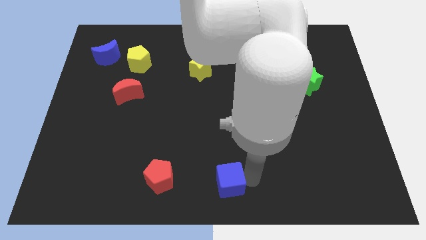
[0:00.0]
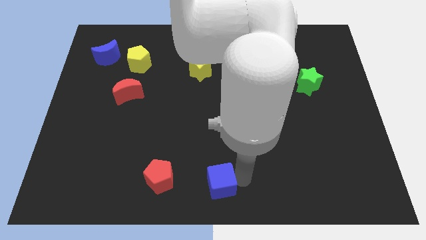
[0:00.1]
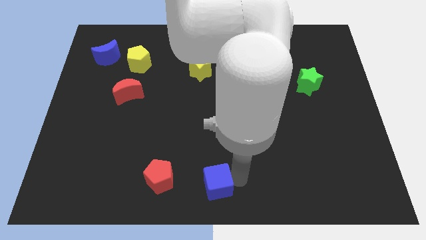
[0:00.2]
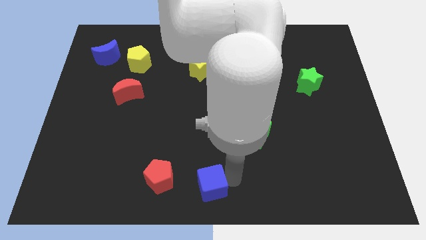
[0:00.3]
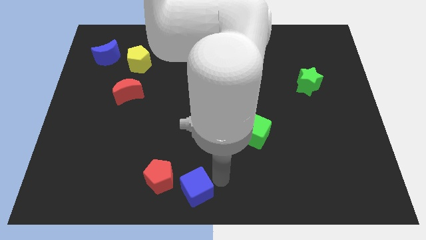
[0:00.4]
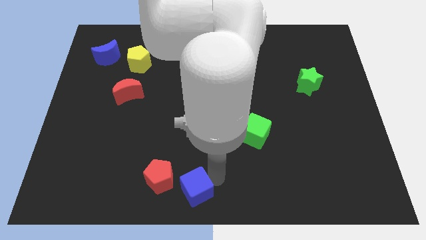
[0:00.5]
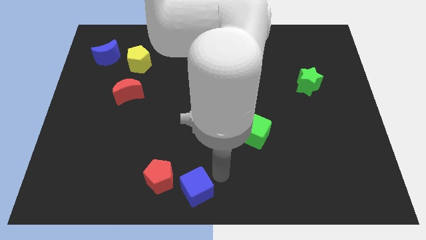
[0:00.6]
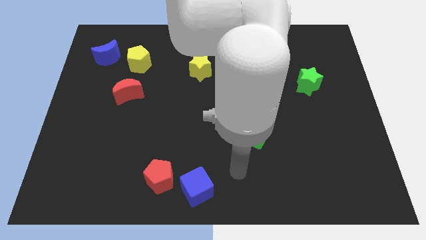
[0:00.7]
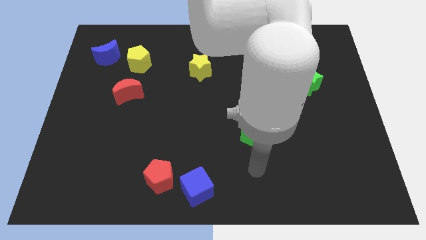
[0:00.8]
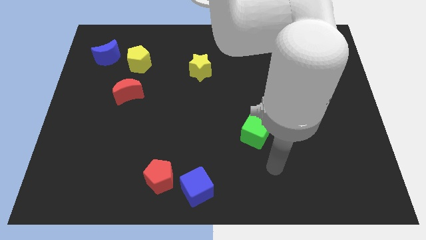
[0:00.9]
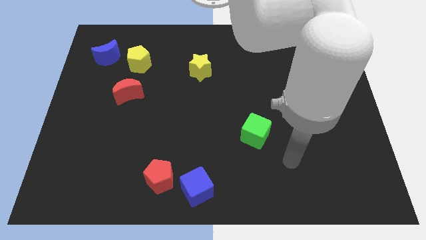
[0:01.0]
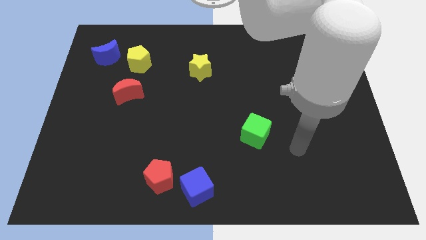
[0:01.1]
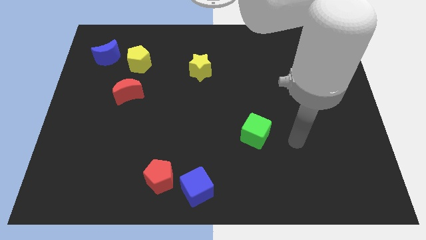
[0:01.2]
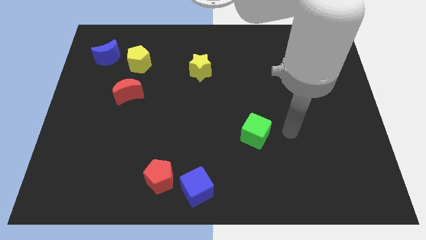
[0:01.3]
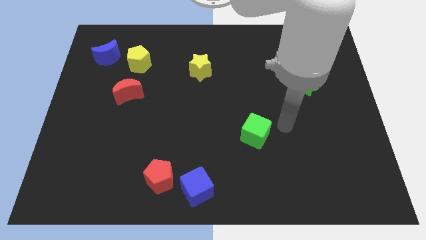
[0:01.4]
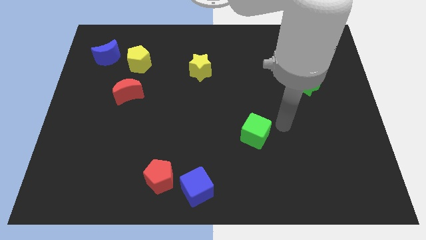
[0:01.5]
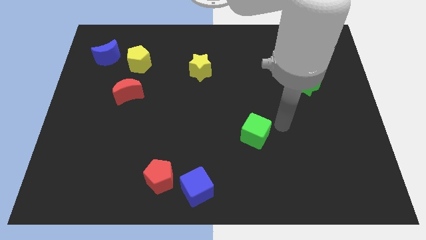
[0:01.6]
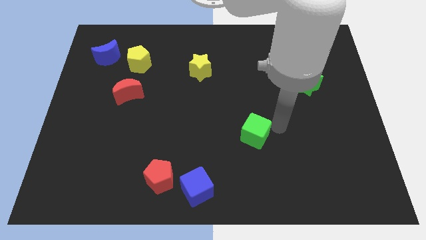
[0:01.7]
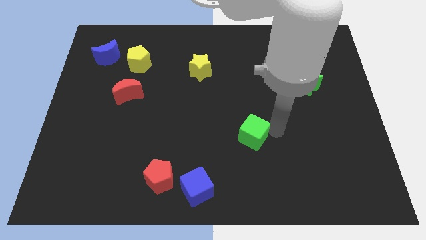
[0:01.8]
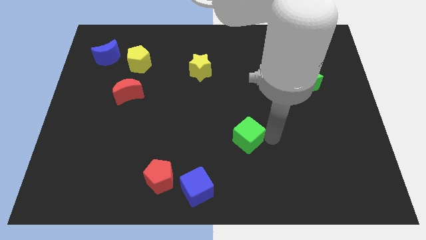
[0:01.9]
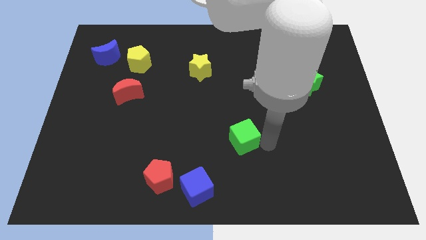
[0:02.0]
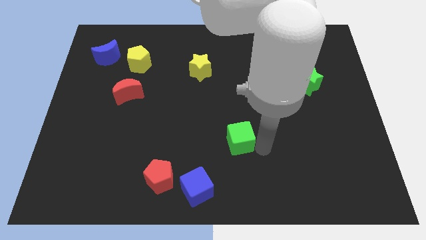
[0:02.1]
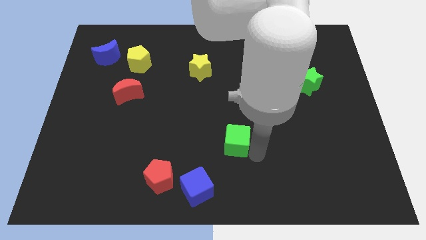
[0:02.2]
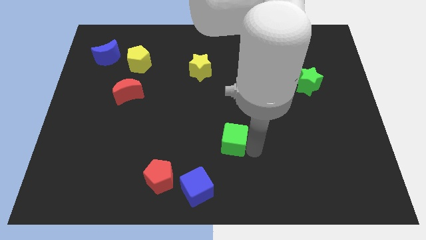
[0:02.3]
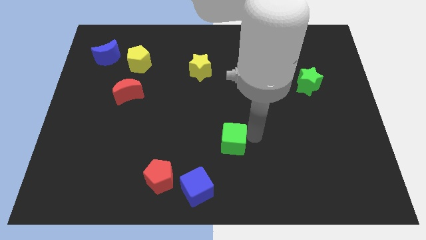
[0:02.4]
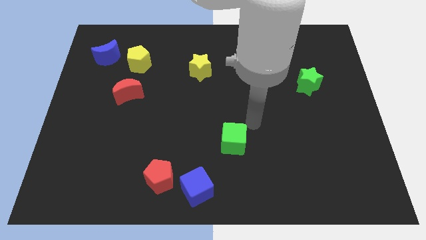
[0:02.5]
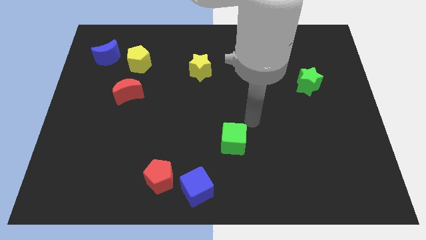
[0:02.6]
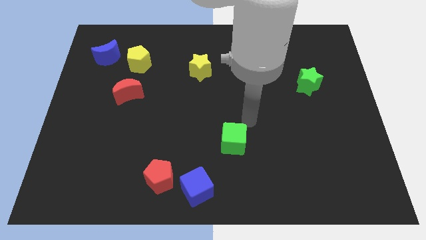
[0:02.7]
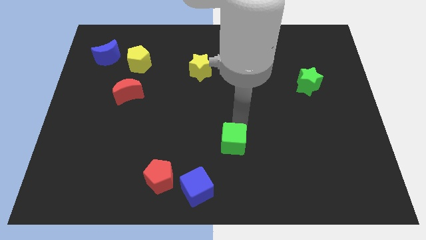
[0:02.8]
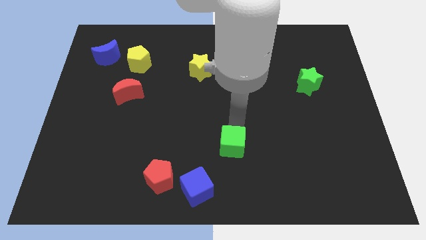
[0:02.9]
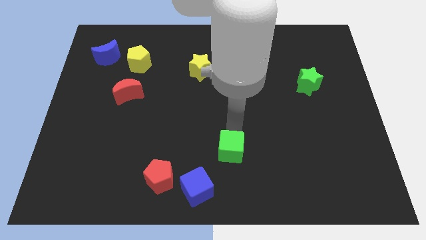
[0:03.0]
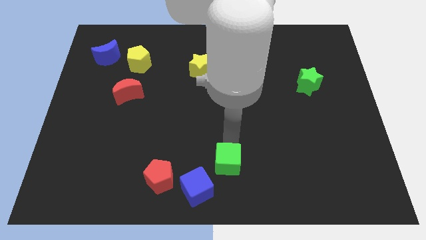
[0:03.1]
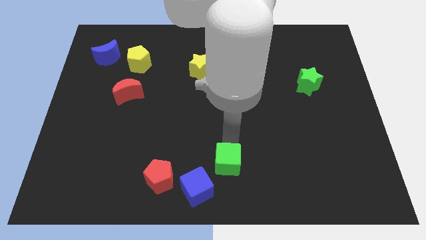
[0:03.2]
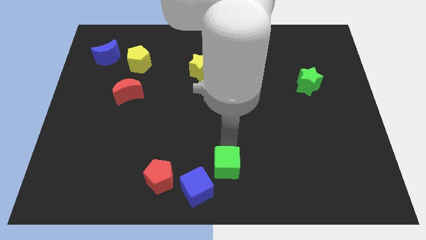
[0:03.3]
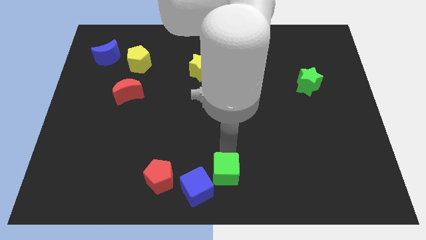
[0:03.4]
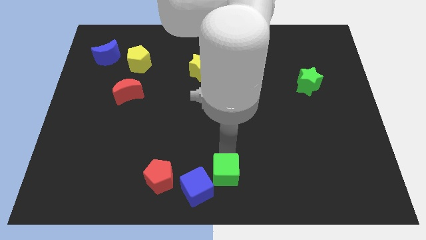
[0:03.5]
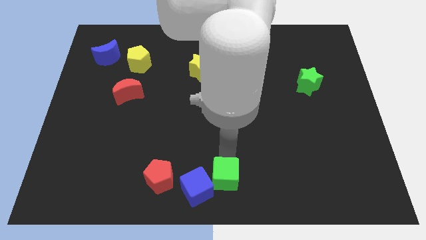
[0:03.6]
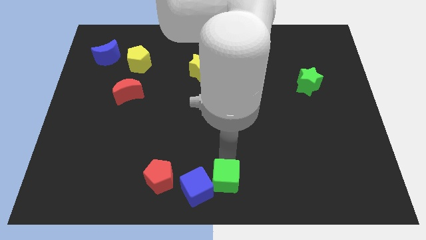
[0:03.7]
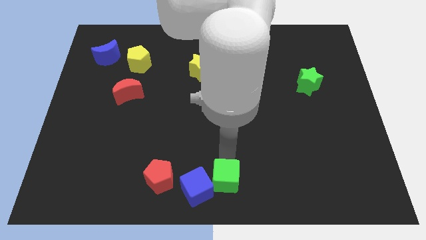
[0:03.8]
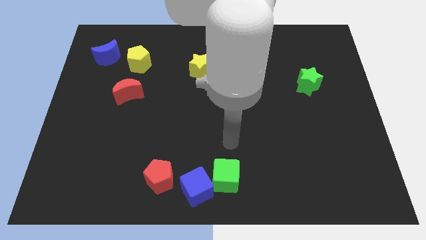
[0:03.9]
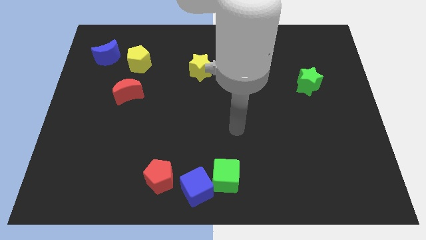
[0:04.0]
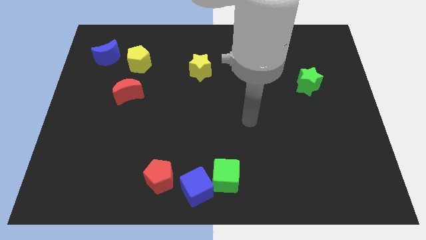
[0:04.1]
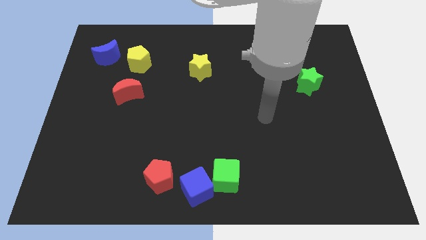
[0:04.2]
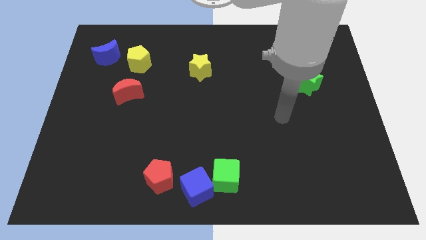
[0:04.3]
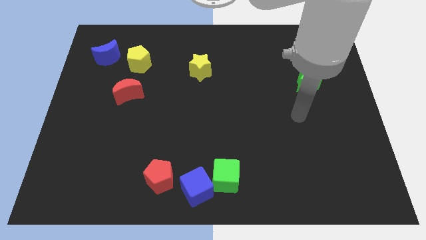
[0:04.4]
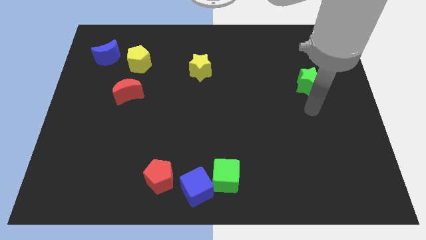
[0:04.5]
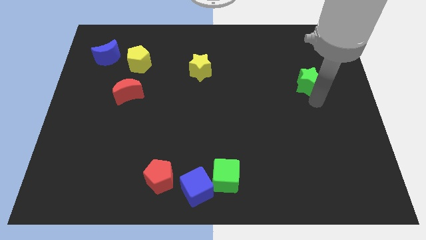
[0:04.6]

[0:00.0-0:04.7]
move the blue cube and the green cube towards the bottom center of the board

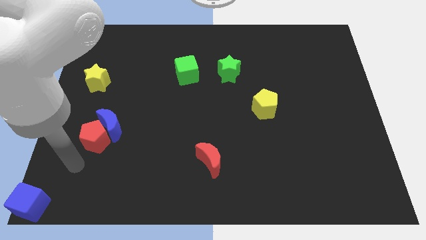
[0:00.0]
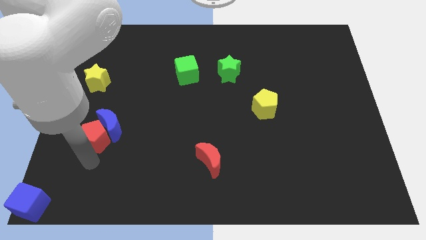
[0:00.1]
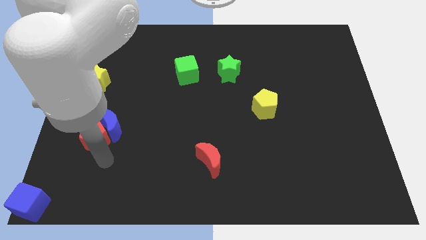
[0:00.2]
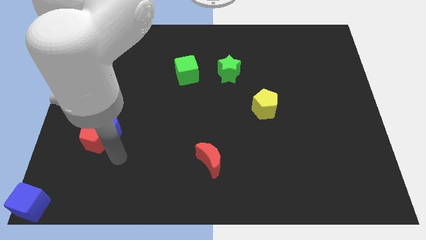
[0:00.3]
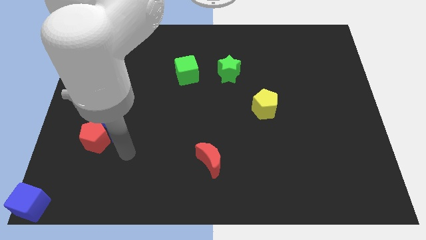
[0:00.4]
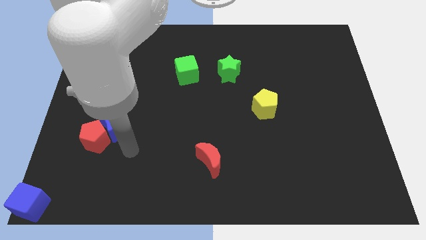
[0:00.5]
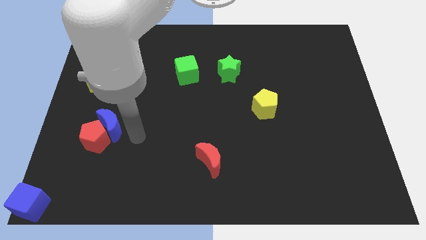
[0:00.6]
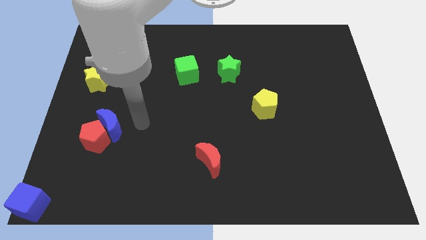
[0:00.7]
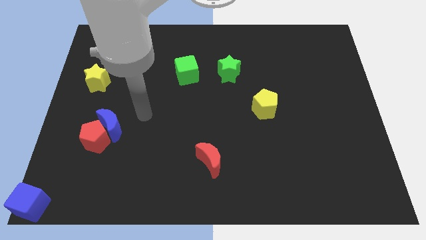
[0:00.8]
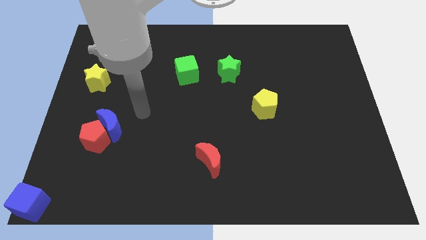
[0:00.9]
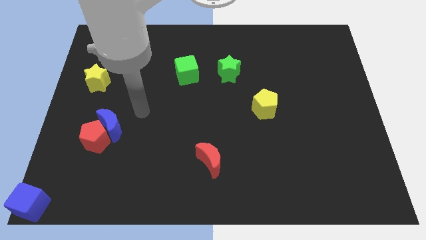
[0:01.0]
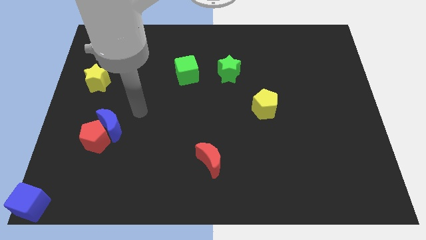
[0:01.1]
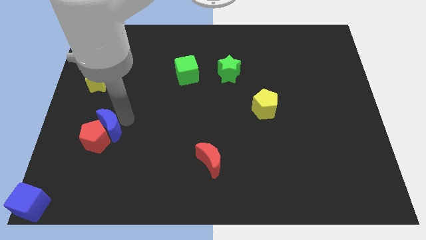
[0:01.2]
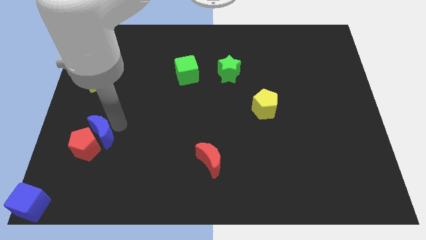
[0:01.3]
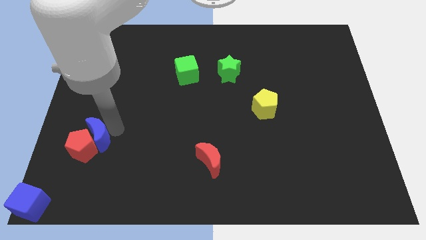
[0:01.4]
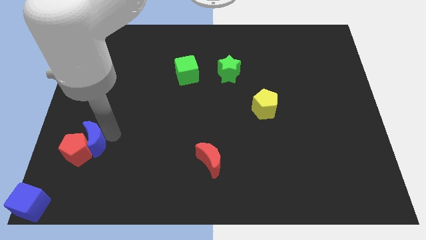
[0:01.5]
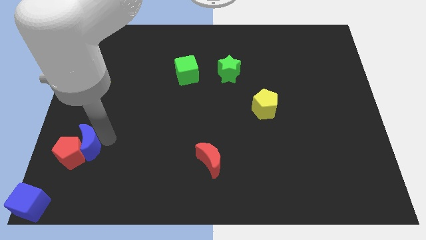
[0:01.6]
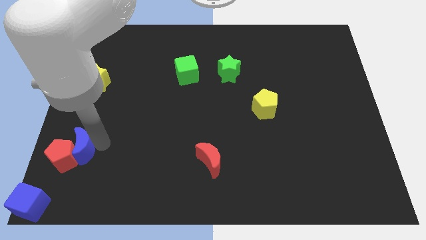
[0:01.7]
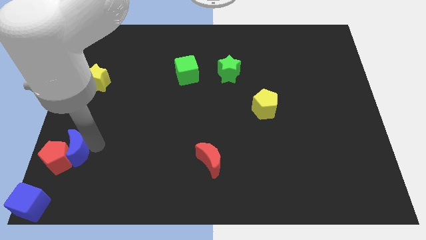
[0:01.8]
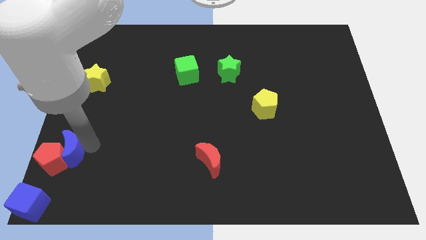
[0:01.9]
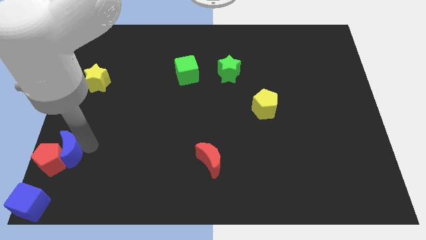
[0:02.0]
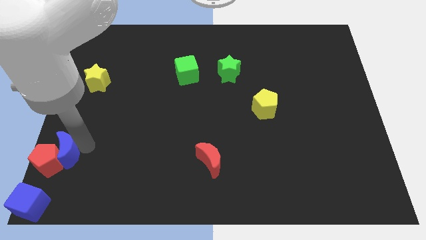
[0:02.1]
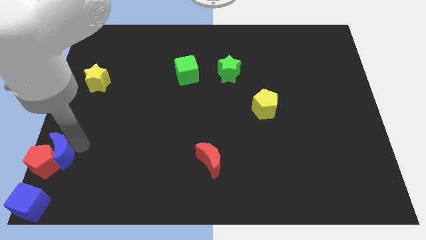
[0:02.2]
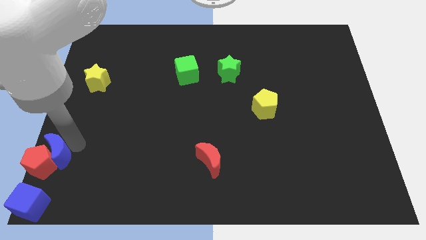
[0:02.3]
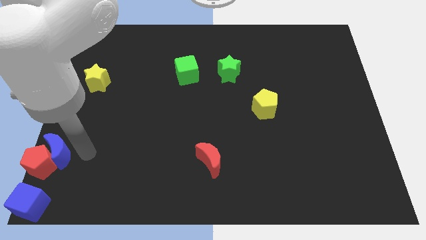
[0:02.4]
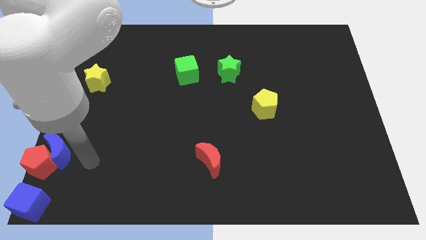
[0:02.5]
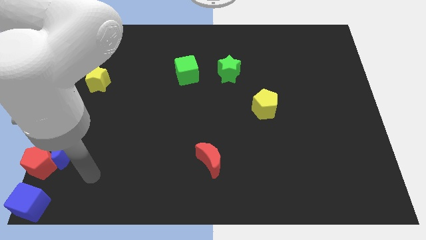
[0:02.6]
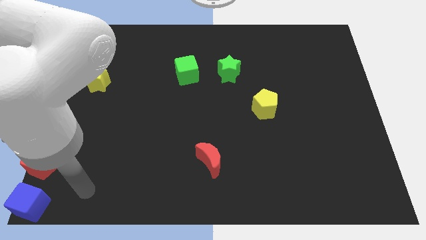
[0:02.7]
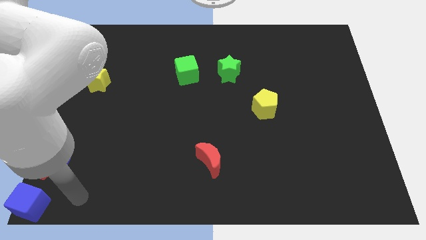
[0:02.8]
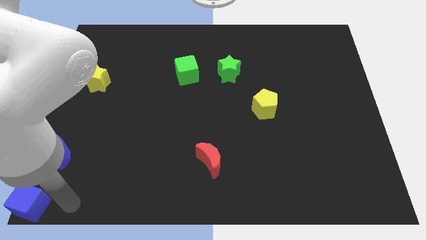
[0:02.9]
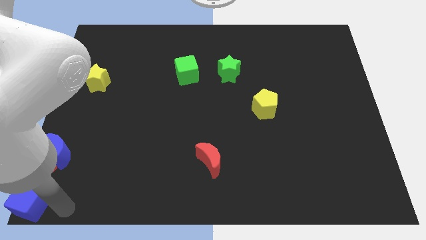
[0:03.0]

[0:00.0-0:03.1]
push the blue crescent and red pentagon towards the left

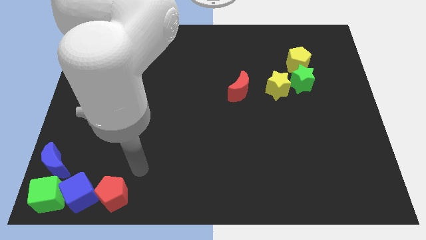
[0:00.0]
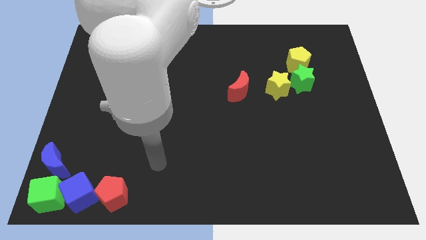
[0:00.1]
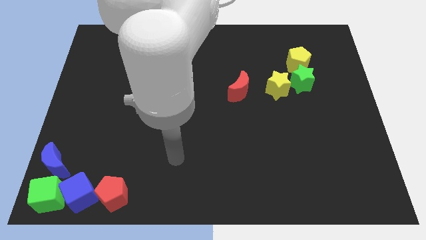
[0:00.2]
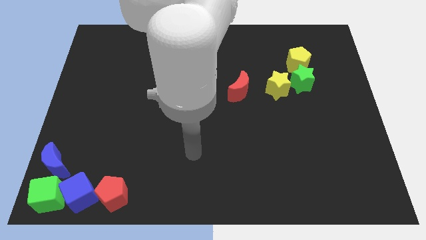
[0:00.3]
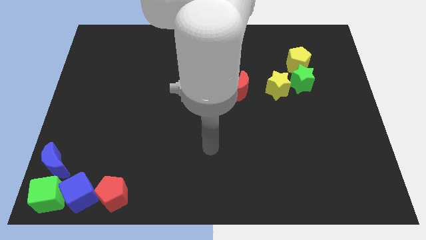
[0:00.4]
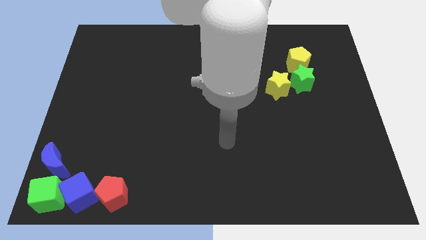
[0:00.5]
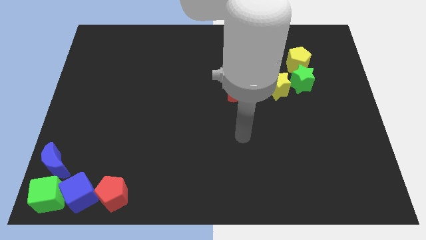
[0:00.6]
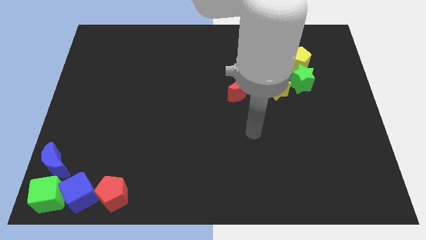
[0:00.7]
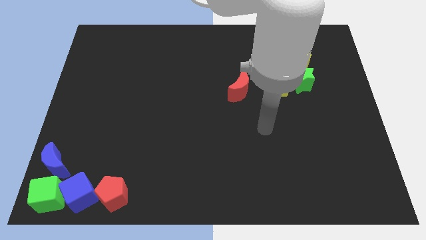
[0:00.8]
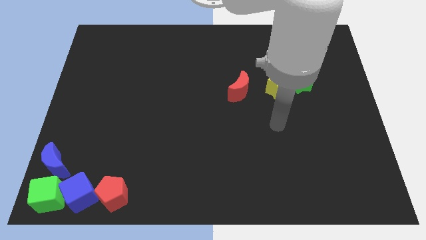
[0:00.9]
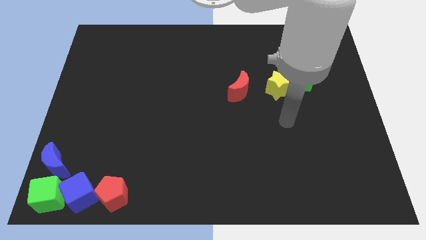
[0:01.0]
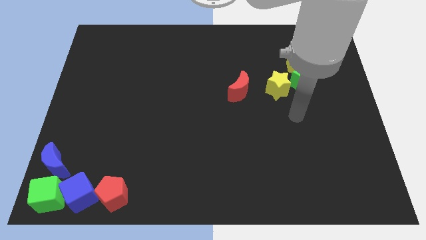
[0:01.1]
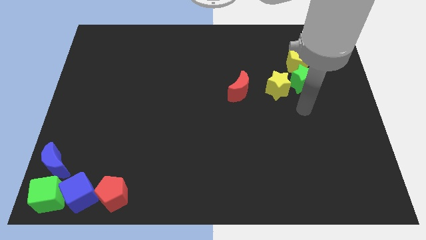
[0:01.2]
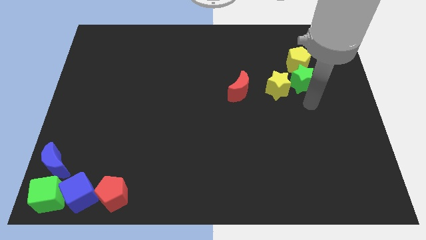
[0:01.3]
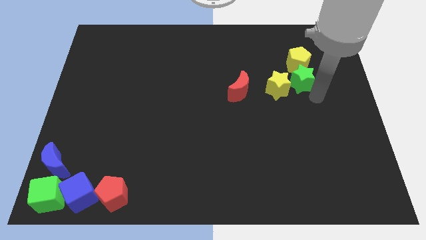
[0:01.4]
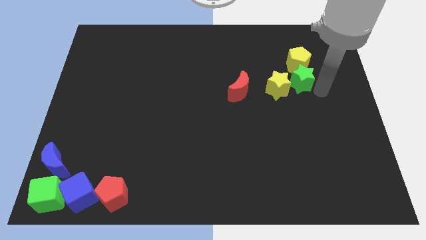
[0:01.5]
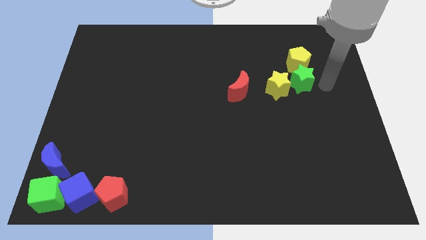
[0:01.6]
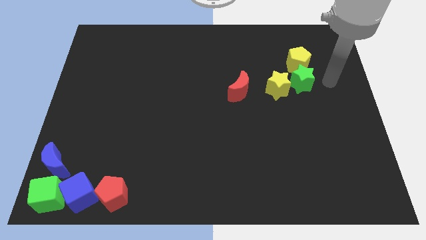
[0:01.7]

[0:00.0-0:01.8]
point your arm to the right of the green star
